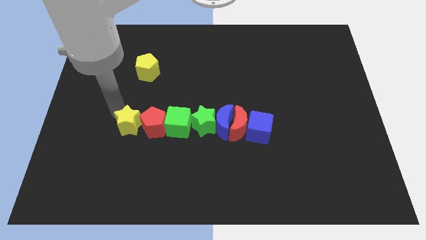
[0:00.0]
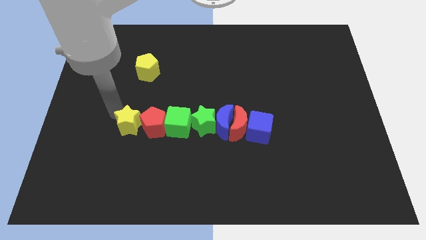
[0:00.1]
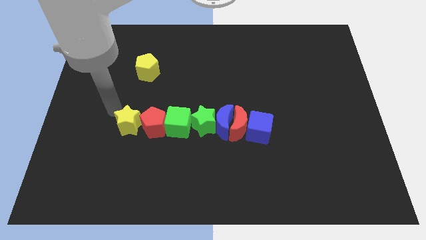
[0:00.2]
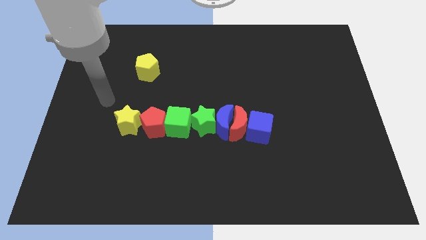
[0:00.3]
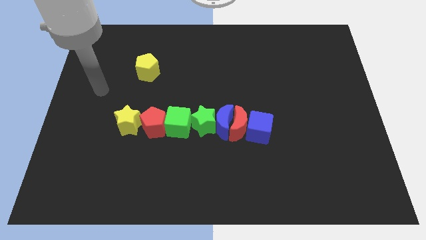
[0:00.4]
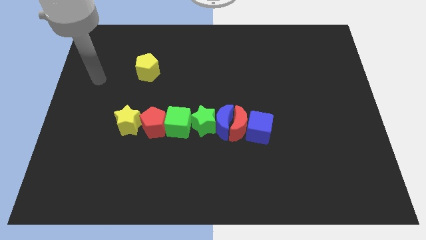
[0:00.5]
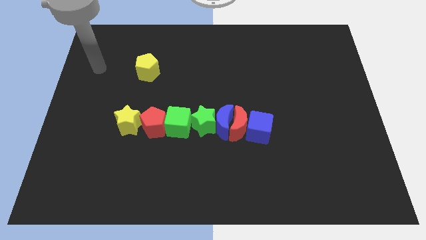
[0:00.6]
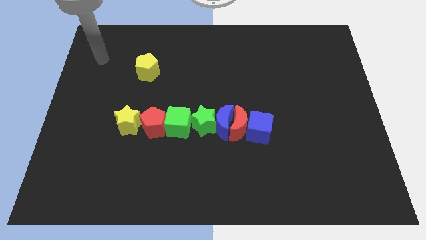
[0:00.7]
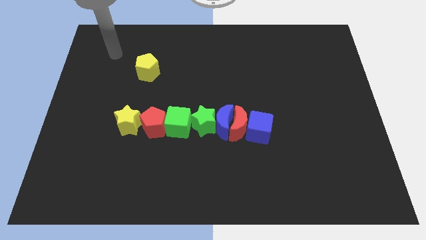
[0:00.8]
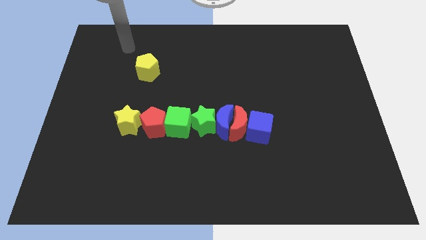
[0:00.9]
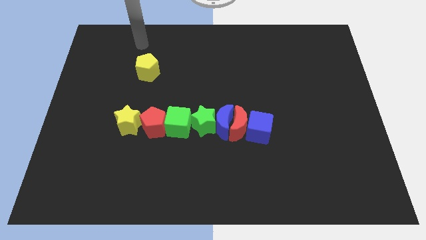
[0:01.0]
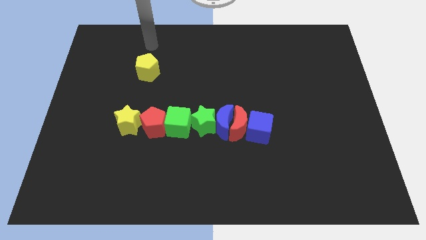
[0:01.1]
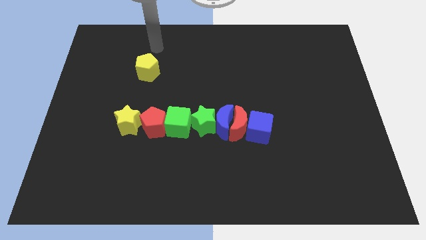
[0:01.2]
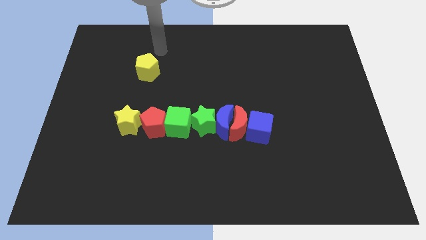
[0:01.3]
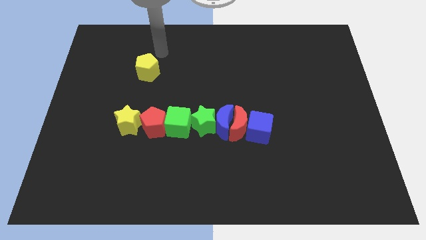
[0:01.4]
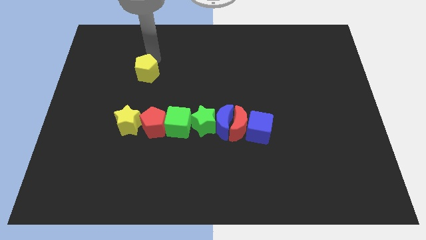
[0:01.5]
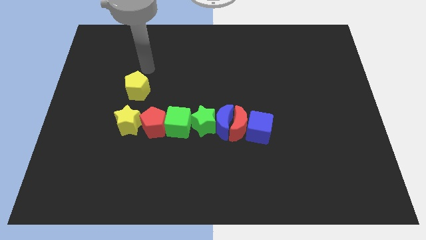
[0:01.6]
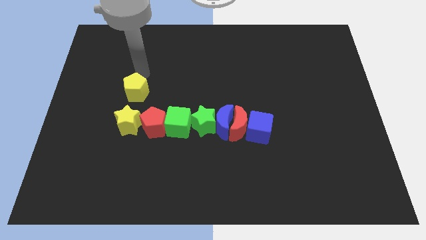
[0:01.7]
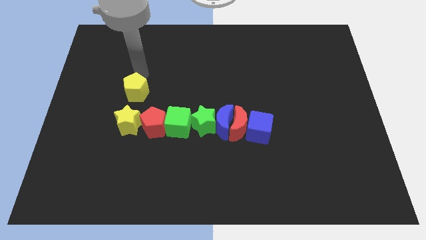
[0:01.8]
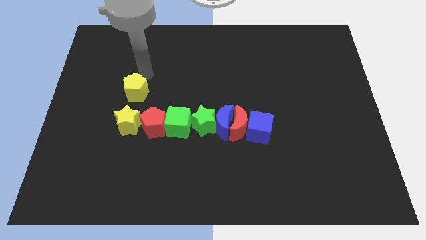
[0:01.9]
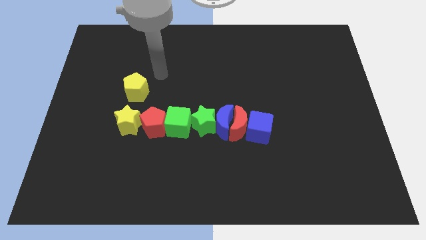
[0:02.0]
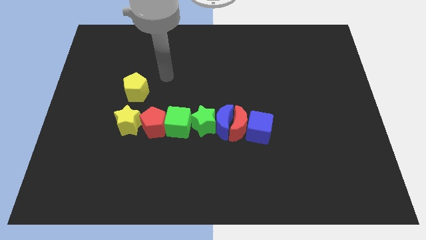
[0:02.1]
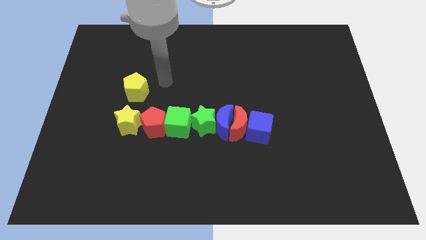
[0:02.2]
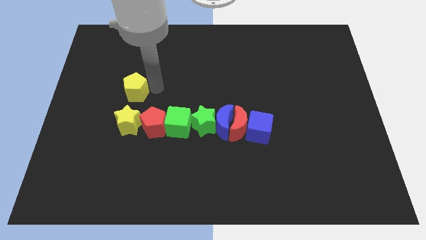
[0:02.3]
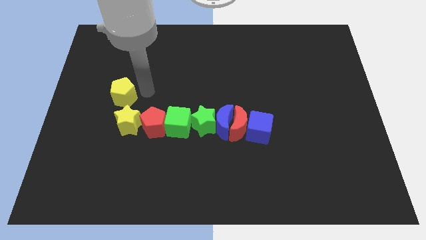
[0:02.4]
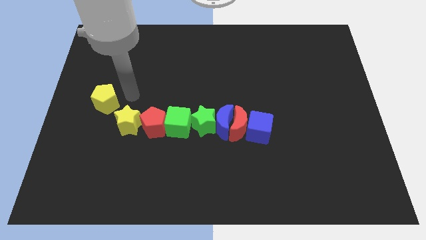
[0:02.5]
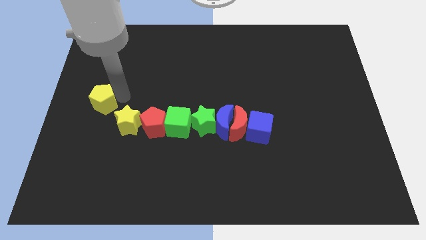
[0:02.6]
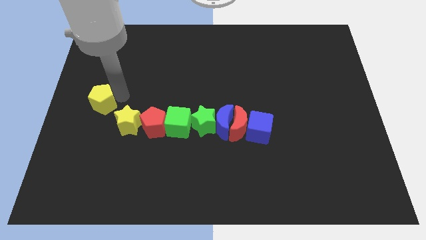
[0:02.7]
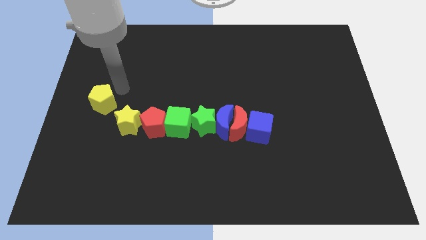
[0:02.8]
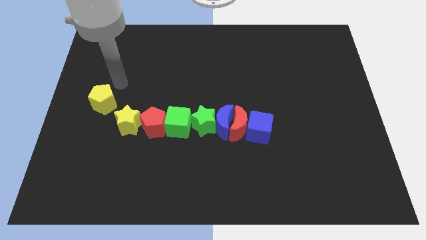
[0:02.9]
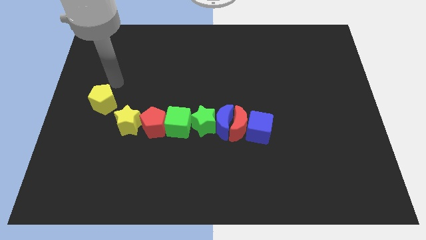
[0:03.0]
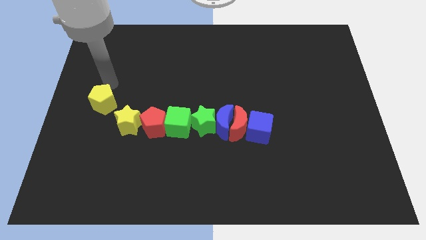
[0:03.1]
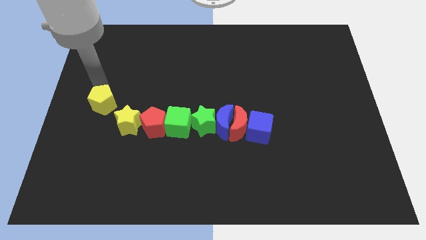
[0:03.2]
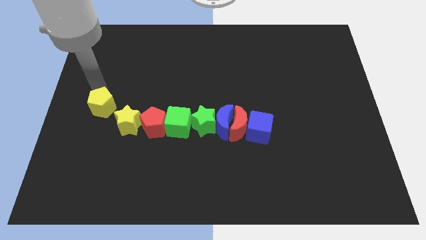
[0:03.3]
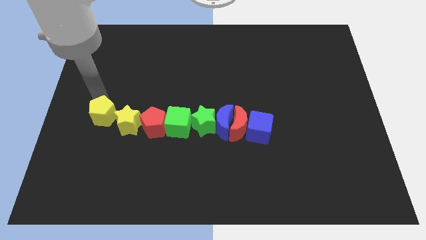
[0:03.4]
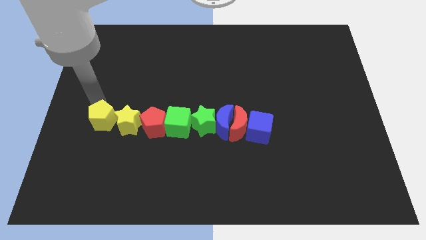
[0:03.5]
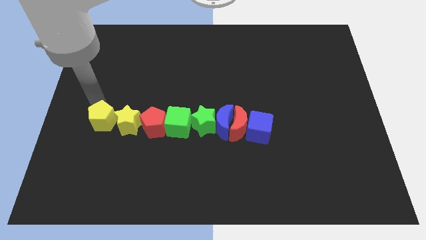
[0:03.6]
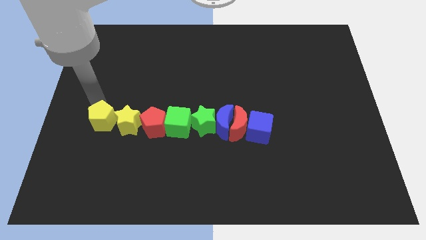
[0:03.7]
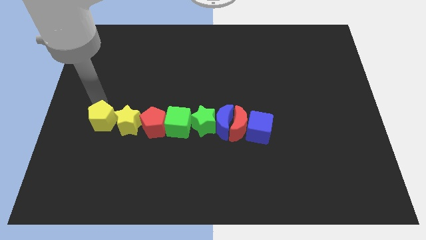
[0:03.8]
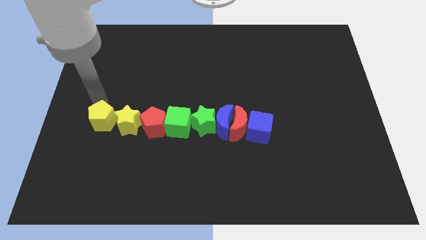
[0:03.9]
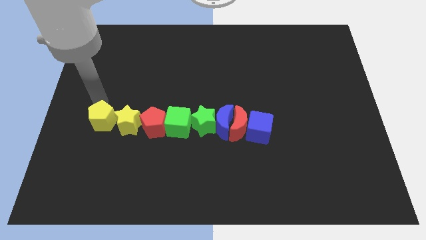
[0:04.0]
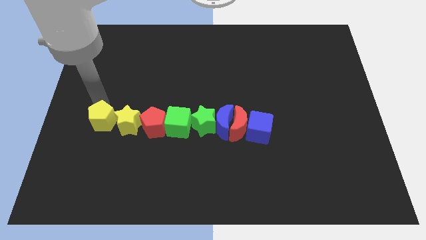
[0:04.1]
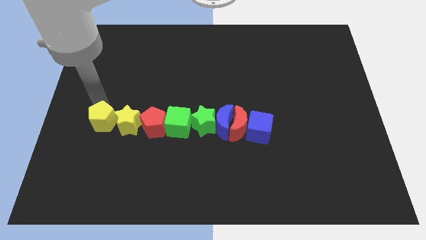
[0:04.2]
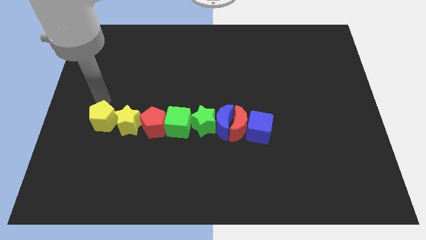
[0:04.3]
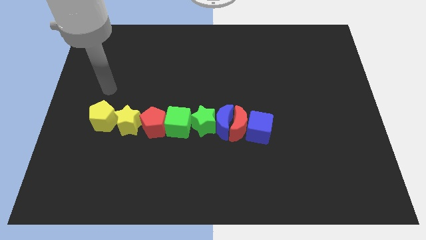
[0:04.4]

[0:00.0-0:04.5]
move the yellow pentagon at the left side of the yellow star

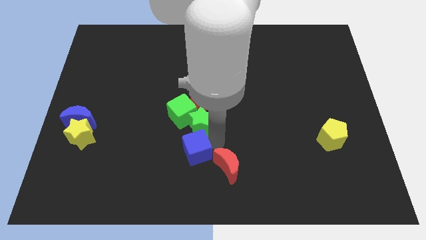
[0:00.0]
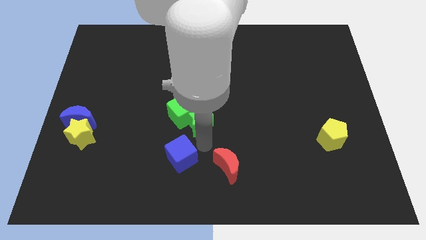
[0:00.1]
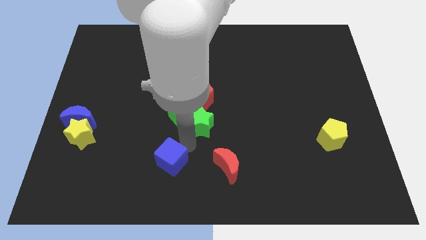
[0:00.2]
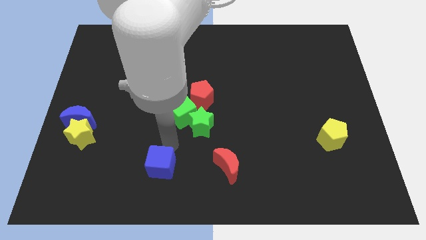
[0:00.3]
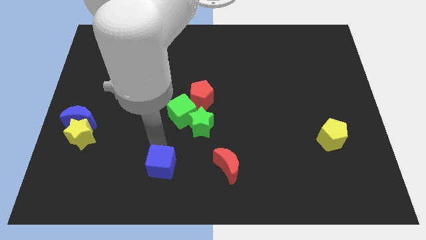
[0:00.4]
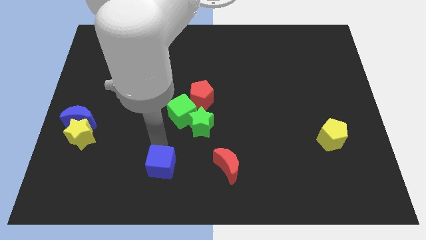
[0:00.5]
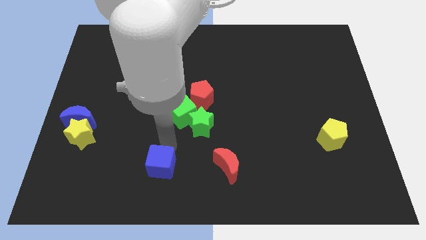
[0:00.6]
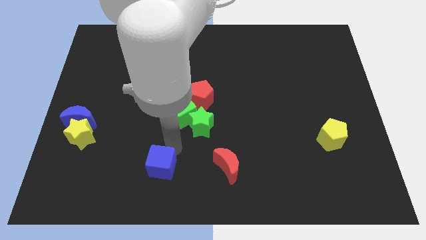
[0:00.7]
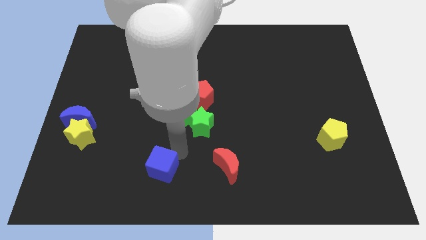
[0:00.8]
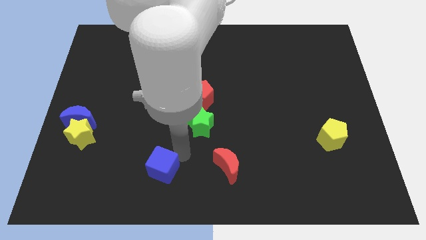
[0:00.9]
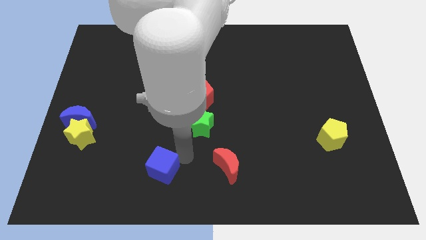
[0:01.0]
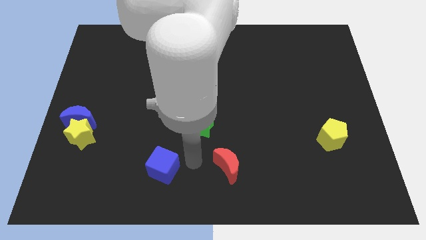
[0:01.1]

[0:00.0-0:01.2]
place the blue cube left to the red moon

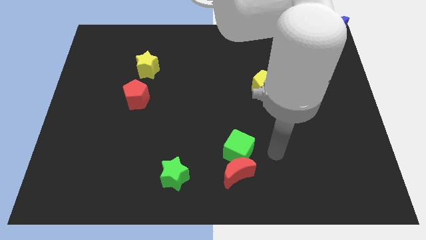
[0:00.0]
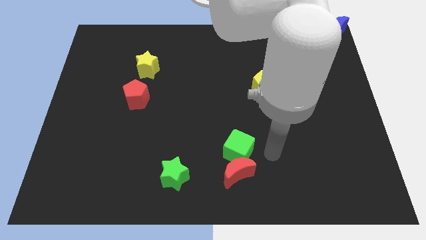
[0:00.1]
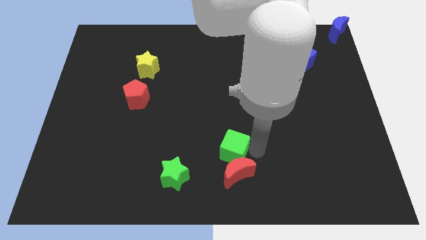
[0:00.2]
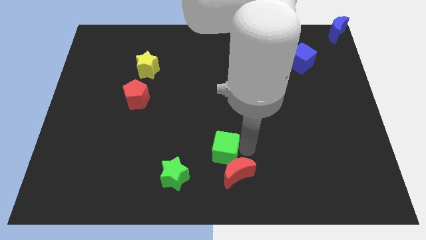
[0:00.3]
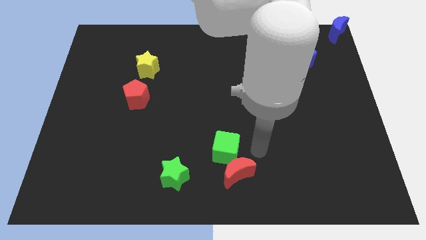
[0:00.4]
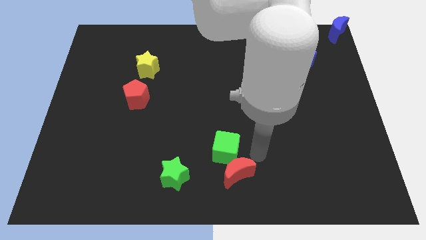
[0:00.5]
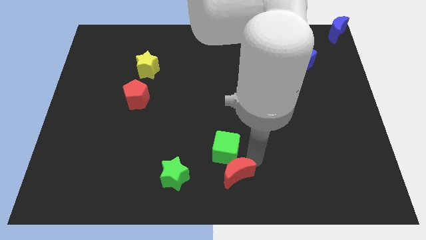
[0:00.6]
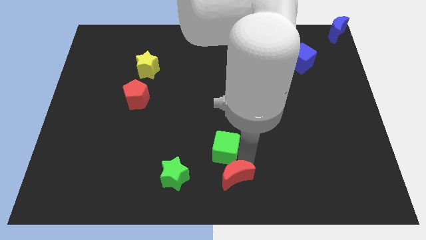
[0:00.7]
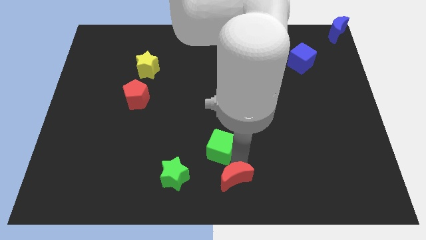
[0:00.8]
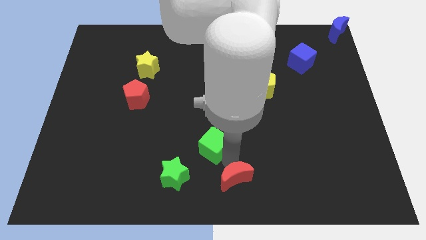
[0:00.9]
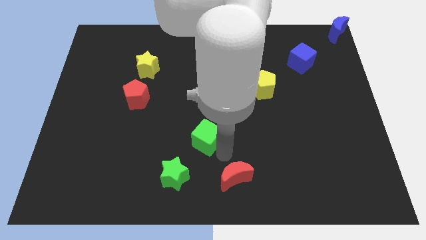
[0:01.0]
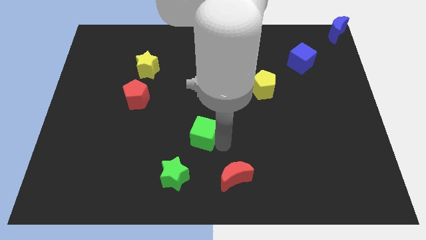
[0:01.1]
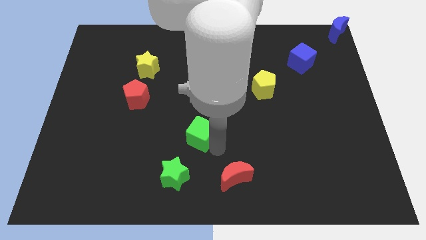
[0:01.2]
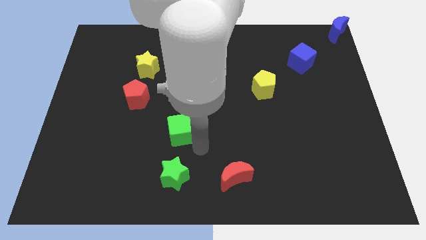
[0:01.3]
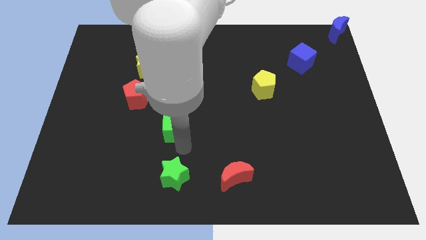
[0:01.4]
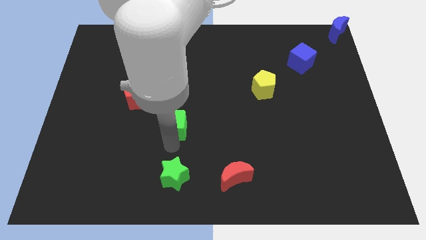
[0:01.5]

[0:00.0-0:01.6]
separate the green cube from the red crescent

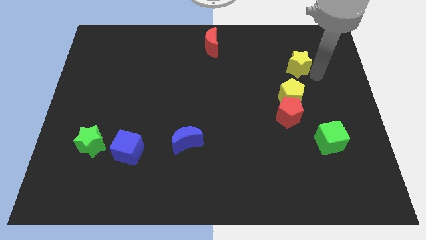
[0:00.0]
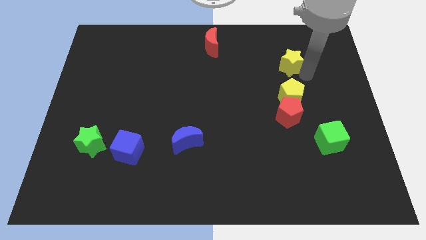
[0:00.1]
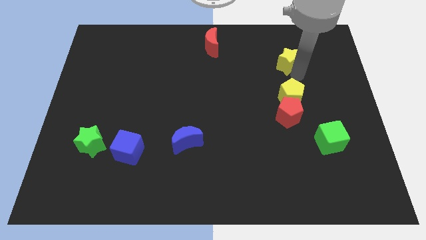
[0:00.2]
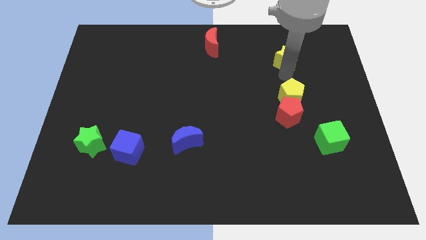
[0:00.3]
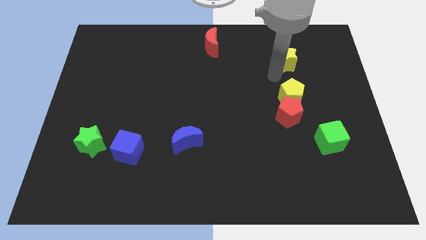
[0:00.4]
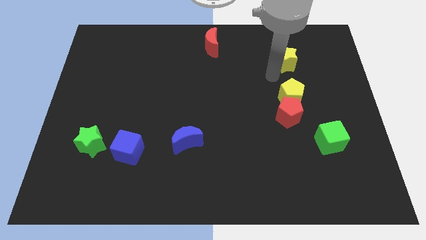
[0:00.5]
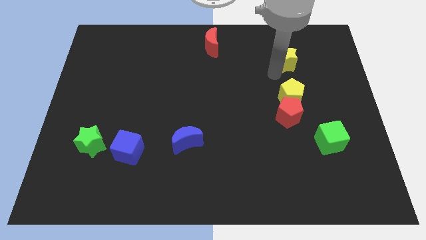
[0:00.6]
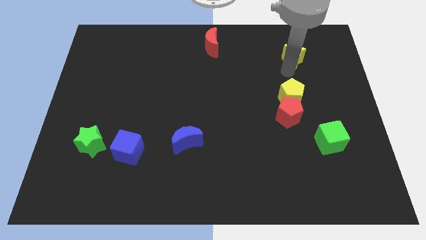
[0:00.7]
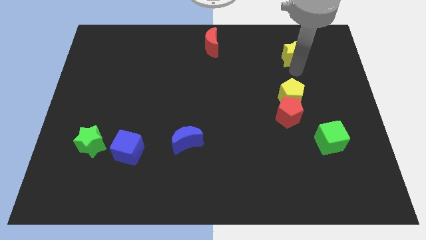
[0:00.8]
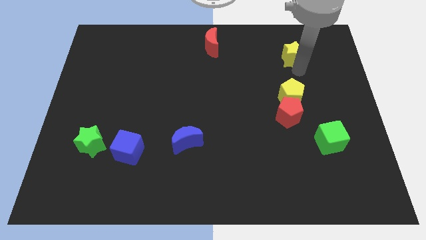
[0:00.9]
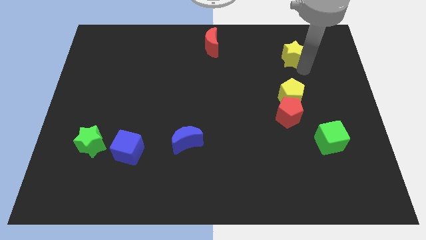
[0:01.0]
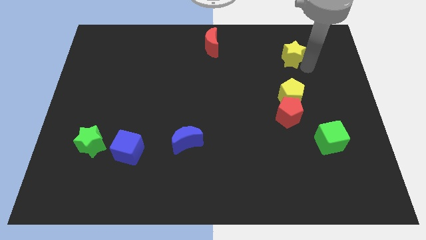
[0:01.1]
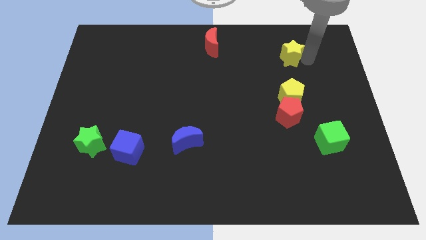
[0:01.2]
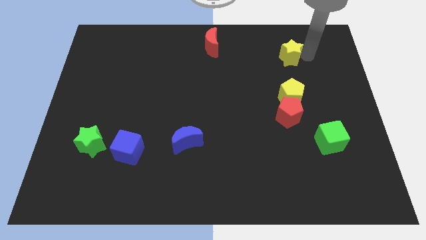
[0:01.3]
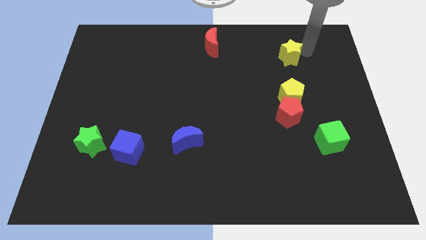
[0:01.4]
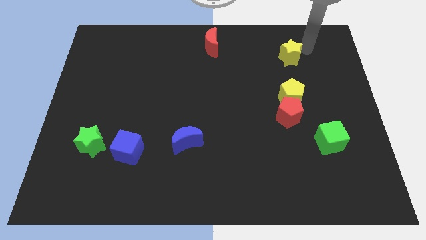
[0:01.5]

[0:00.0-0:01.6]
put the yellow star vertically above the yellow pentagon
